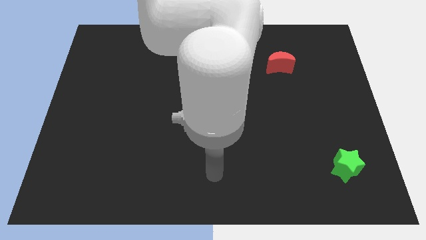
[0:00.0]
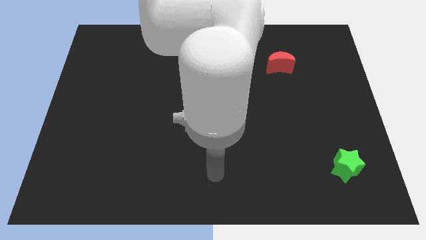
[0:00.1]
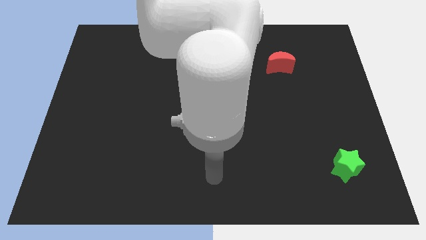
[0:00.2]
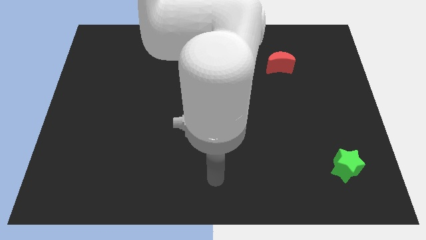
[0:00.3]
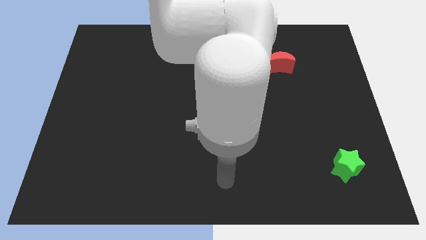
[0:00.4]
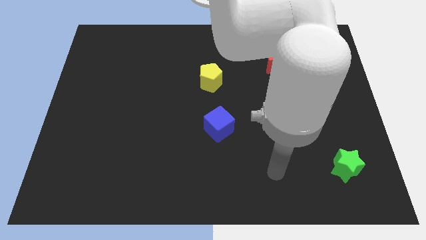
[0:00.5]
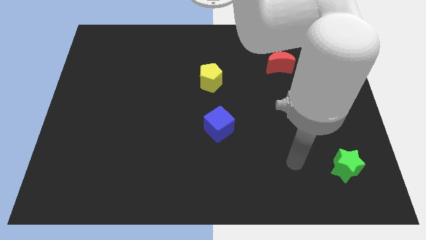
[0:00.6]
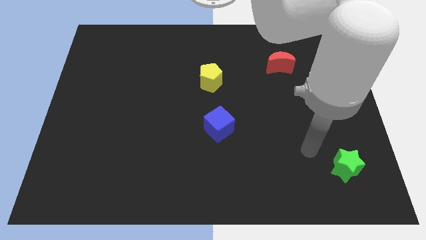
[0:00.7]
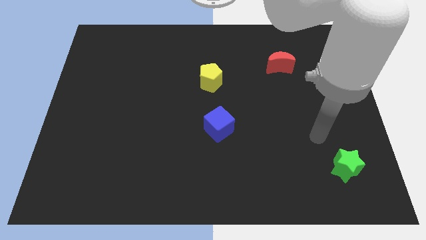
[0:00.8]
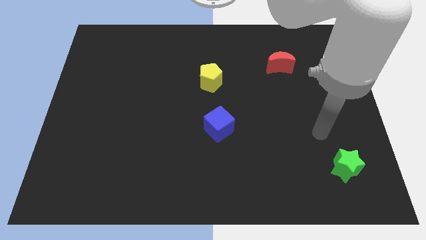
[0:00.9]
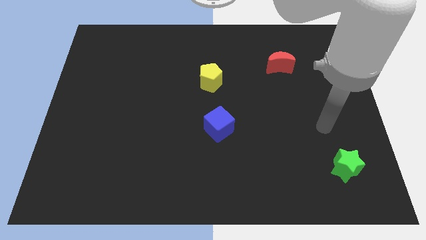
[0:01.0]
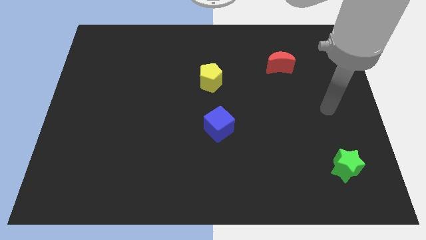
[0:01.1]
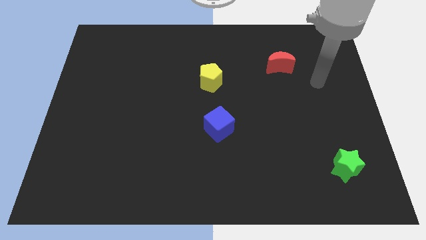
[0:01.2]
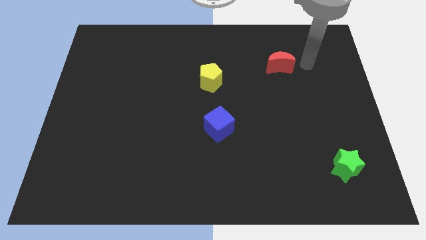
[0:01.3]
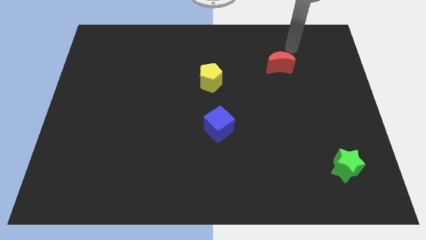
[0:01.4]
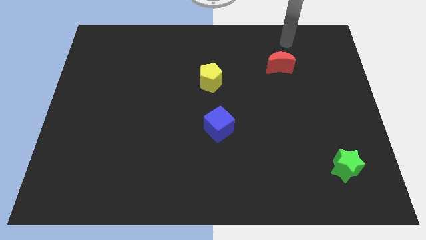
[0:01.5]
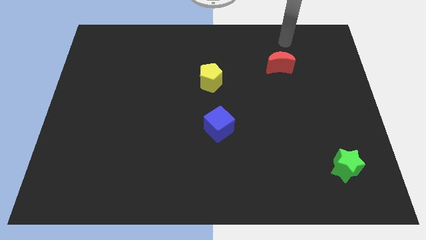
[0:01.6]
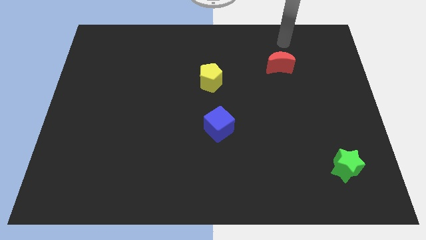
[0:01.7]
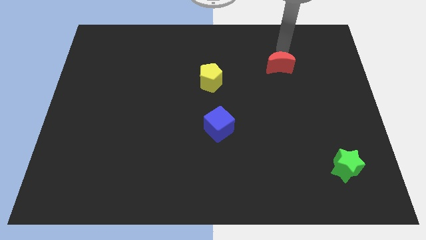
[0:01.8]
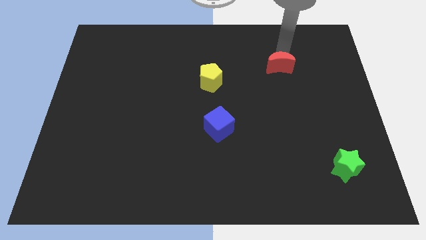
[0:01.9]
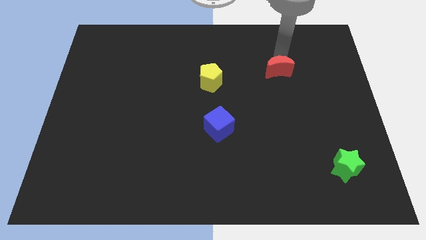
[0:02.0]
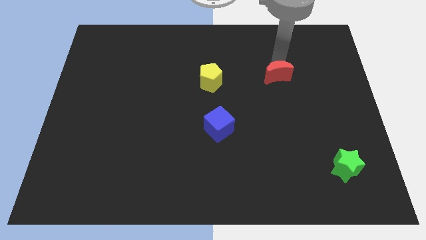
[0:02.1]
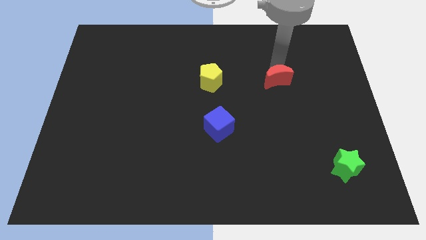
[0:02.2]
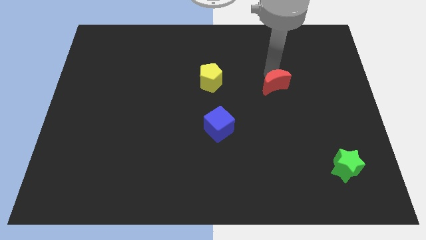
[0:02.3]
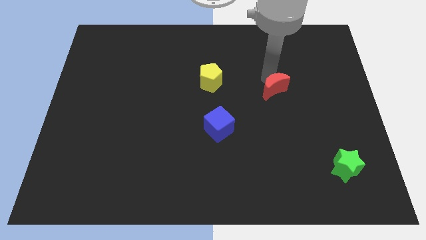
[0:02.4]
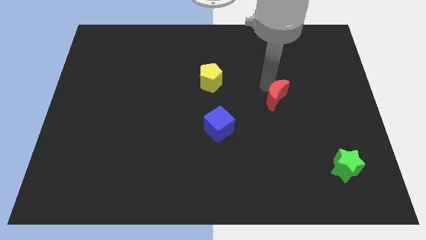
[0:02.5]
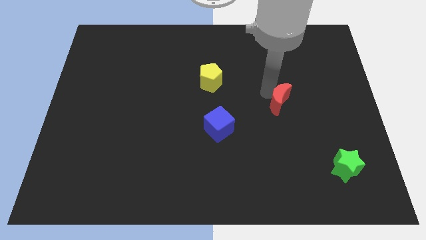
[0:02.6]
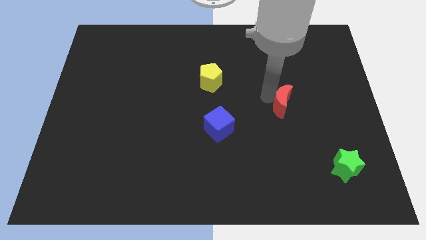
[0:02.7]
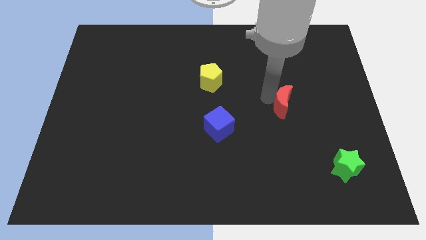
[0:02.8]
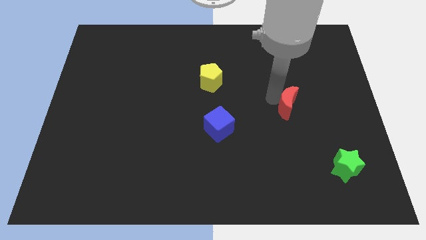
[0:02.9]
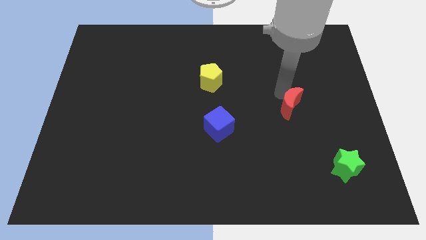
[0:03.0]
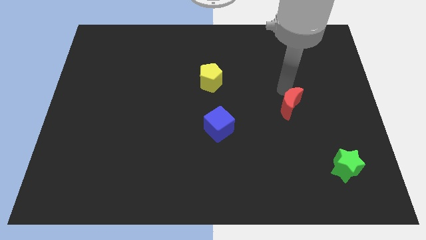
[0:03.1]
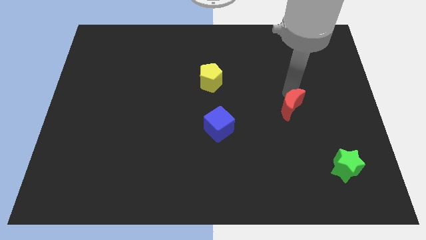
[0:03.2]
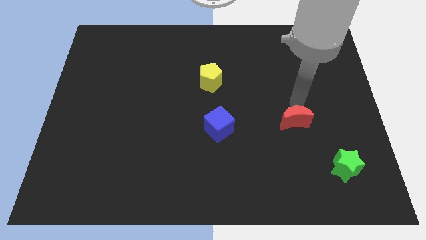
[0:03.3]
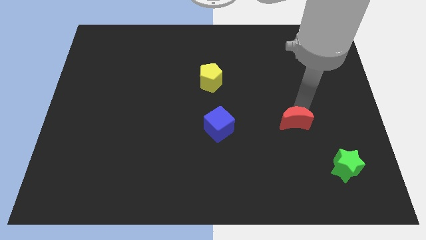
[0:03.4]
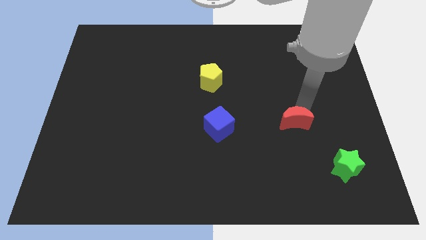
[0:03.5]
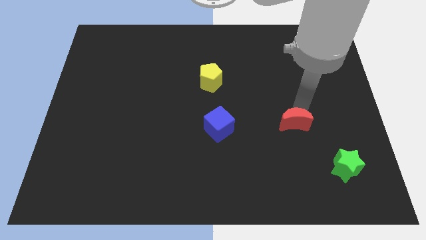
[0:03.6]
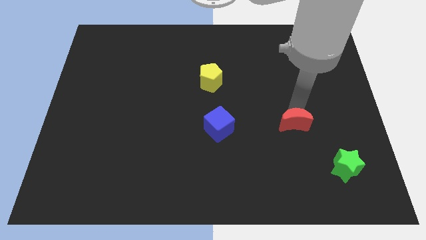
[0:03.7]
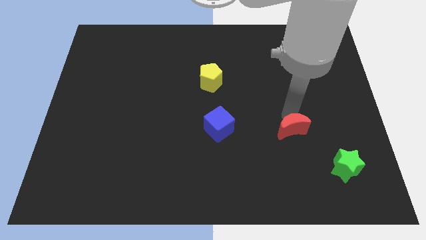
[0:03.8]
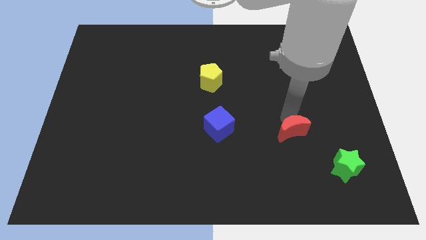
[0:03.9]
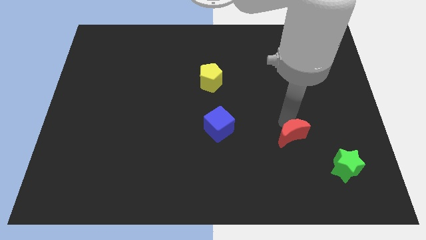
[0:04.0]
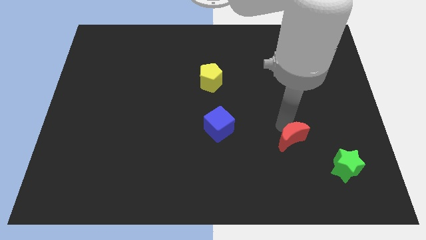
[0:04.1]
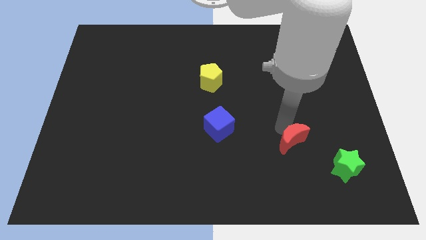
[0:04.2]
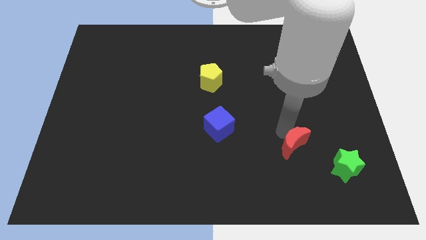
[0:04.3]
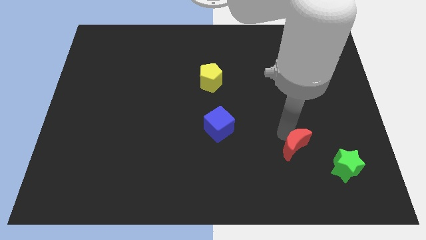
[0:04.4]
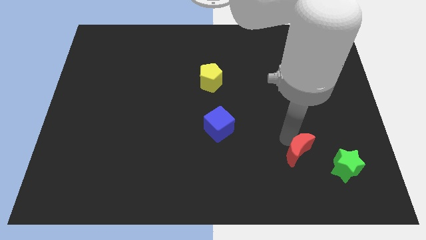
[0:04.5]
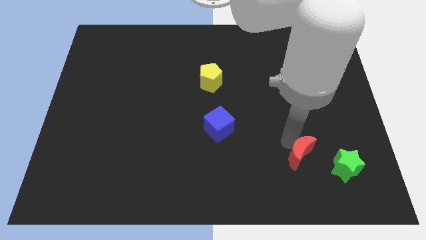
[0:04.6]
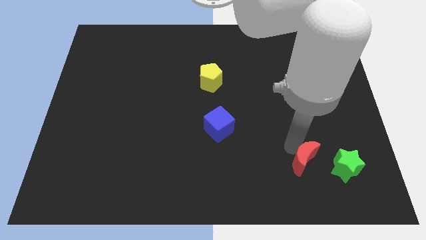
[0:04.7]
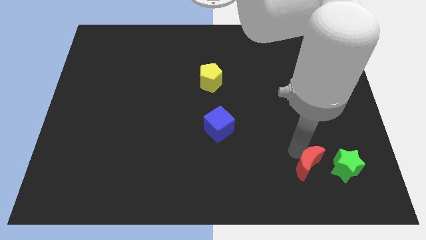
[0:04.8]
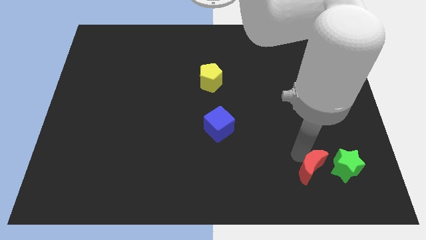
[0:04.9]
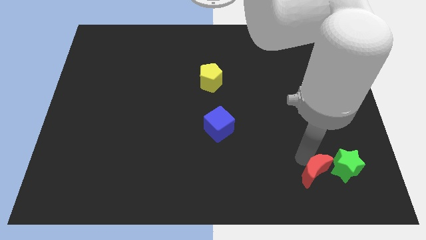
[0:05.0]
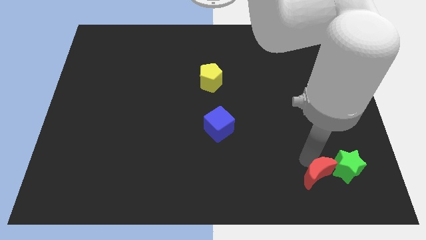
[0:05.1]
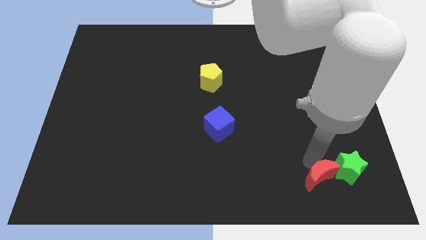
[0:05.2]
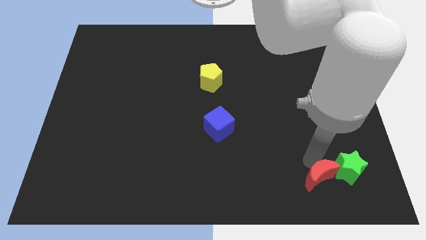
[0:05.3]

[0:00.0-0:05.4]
put the red block towards the star

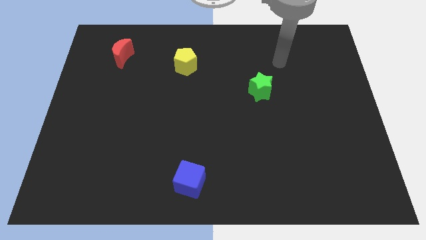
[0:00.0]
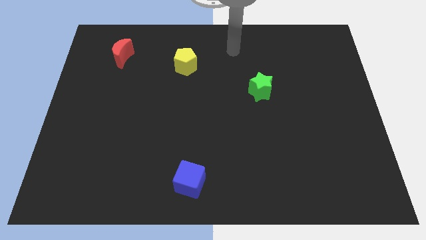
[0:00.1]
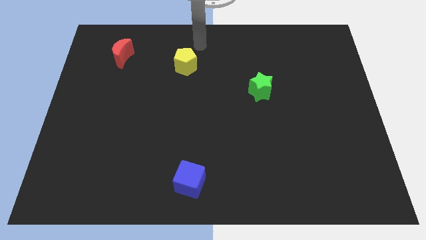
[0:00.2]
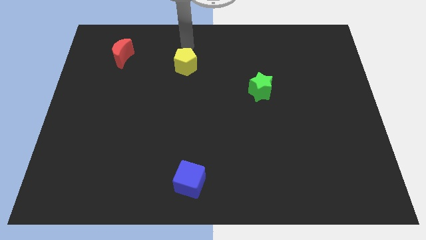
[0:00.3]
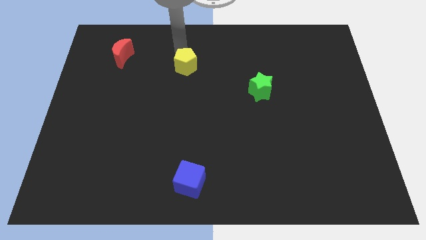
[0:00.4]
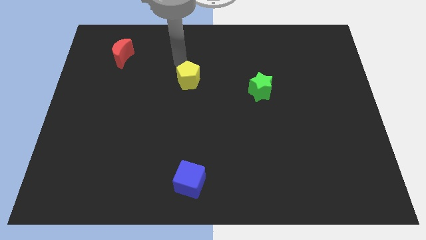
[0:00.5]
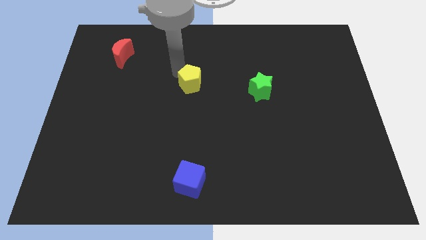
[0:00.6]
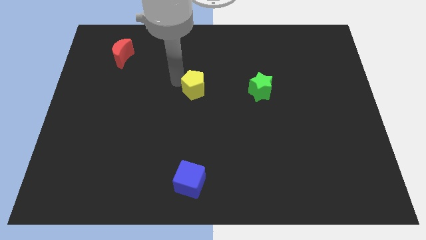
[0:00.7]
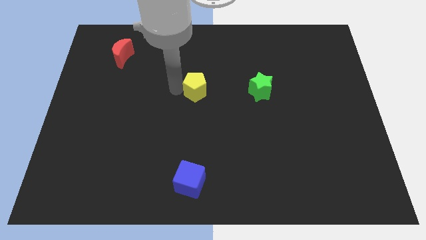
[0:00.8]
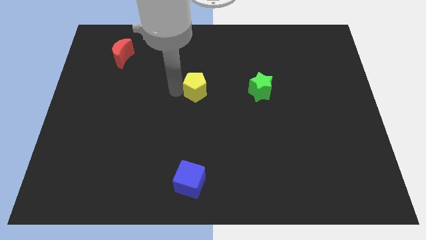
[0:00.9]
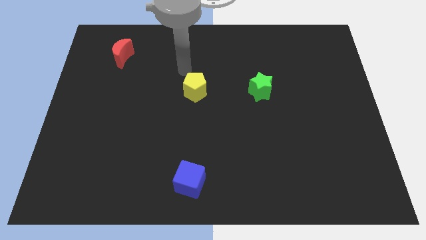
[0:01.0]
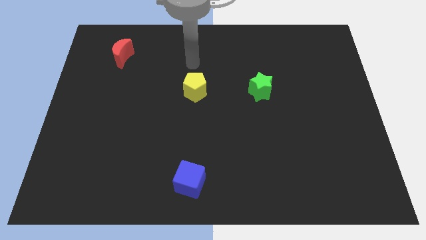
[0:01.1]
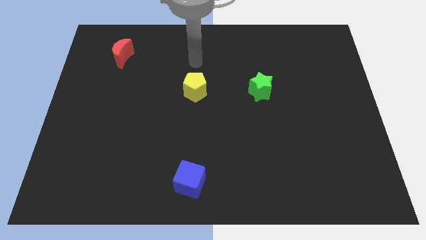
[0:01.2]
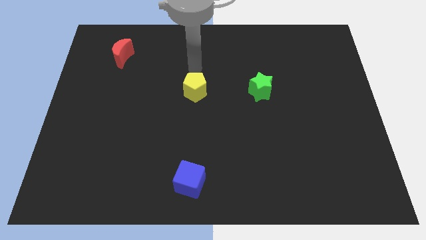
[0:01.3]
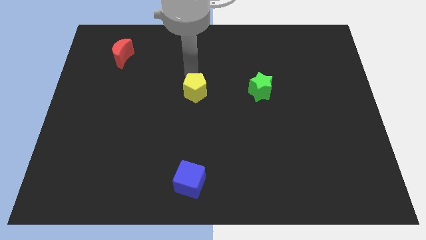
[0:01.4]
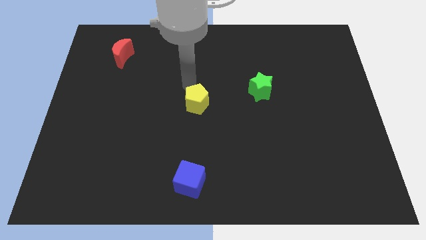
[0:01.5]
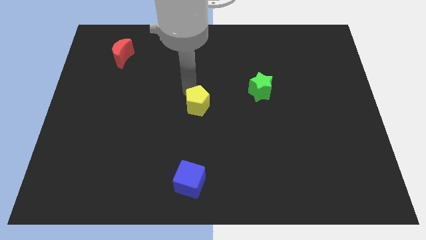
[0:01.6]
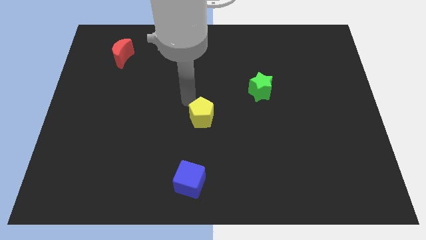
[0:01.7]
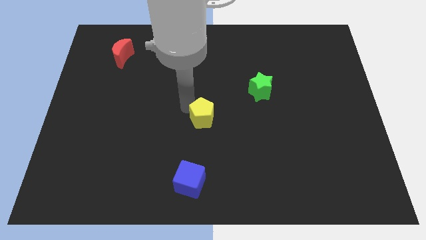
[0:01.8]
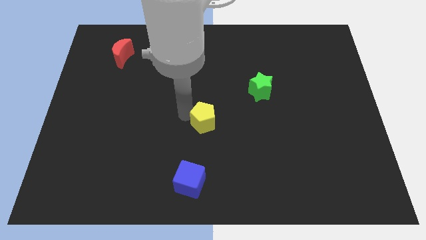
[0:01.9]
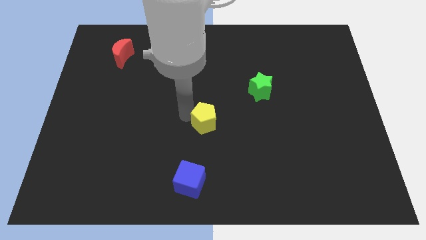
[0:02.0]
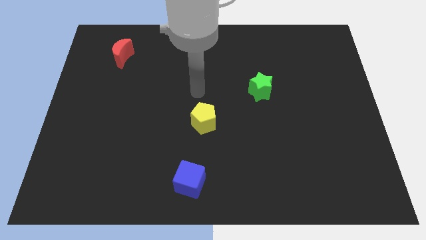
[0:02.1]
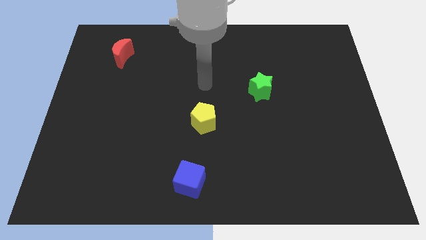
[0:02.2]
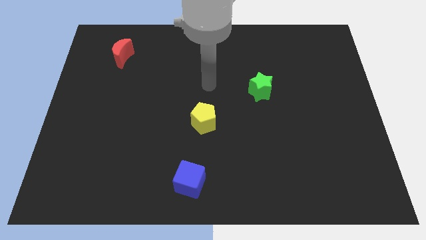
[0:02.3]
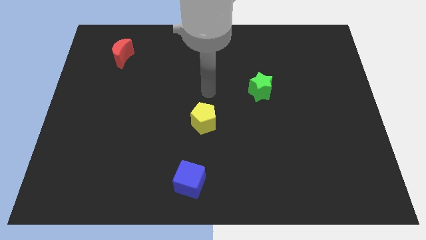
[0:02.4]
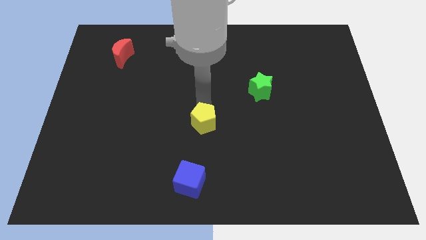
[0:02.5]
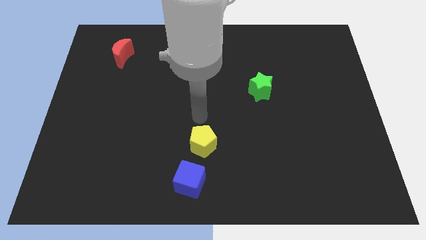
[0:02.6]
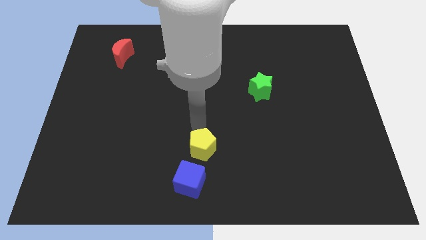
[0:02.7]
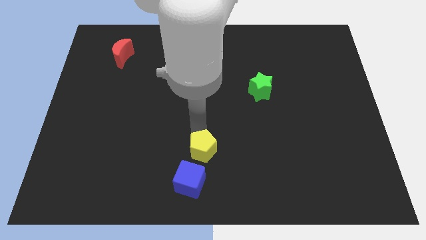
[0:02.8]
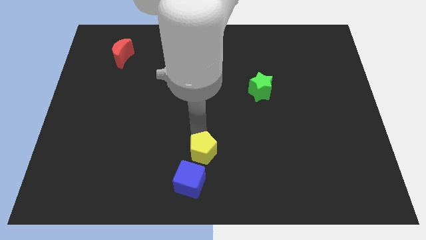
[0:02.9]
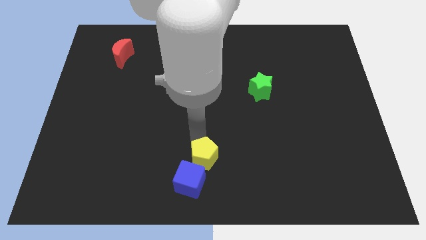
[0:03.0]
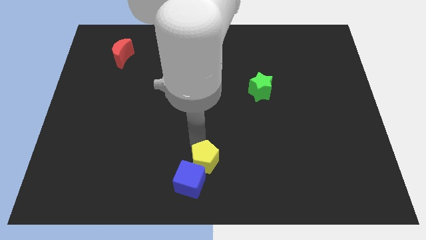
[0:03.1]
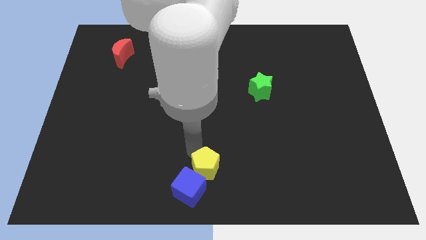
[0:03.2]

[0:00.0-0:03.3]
slide the yellow block next to the cube
